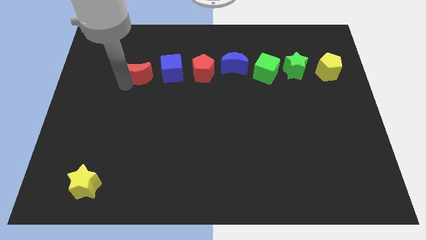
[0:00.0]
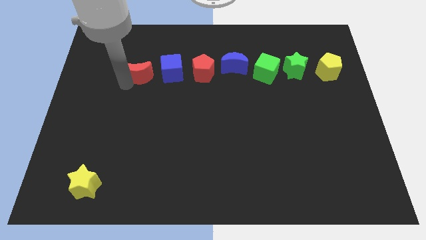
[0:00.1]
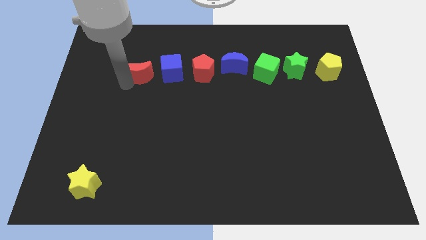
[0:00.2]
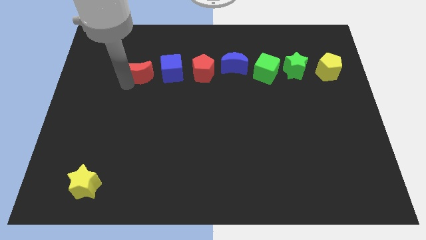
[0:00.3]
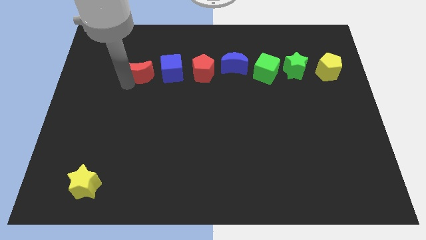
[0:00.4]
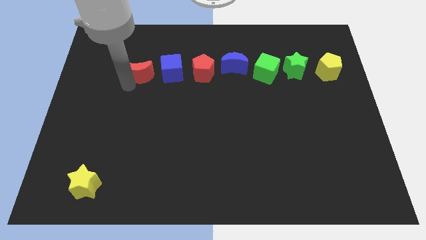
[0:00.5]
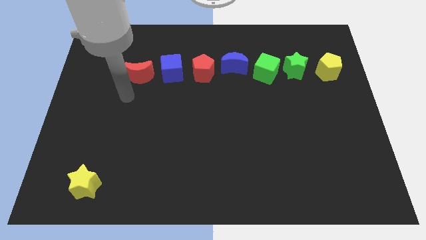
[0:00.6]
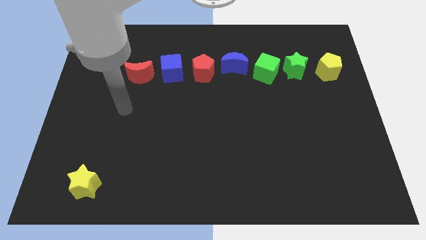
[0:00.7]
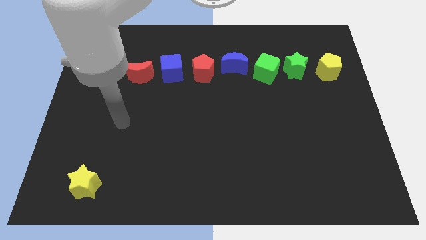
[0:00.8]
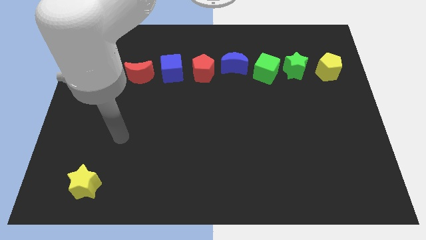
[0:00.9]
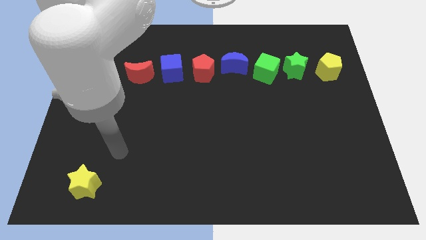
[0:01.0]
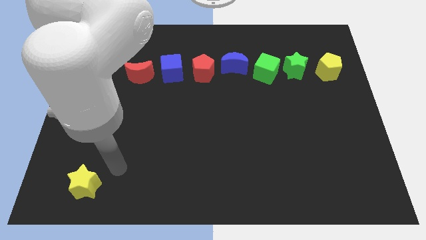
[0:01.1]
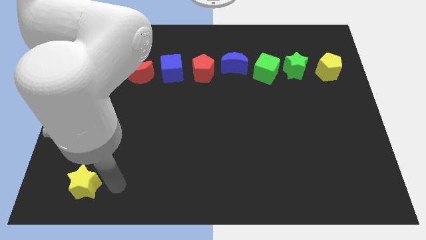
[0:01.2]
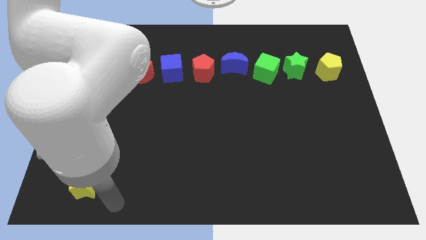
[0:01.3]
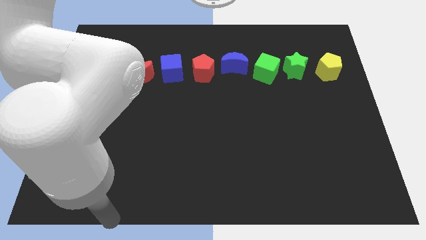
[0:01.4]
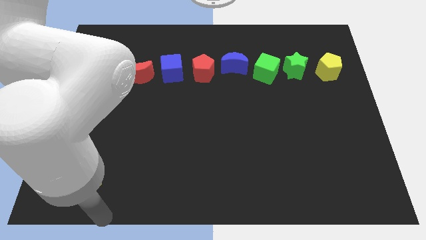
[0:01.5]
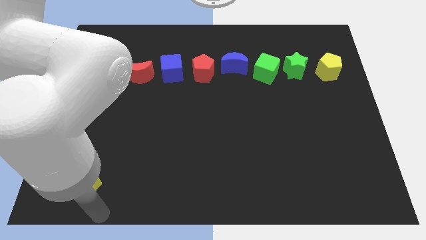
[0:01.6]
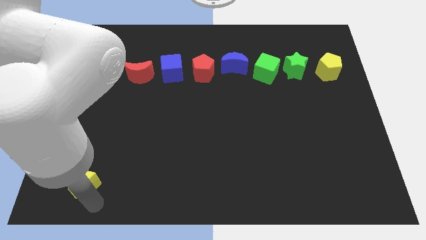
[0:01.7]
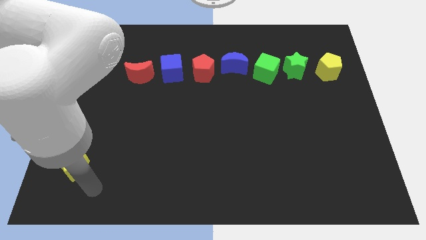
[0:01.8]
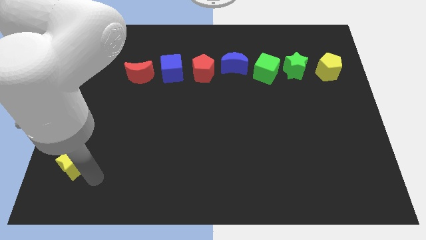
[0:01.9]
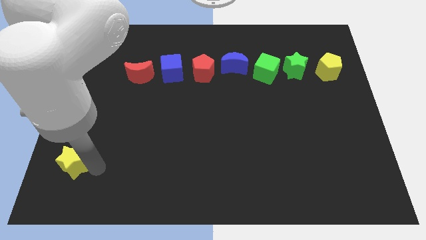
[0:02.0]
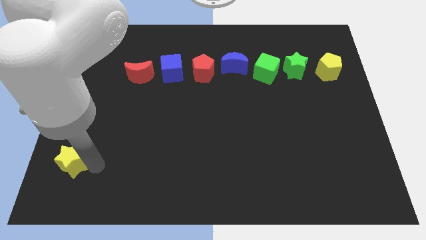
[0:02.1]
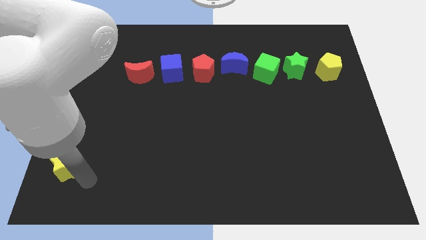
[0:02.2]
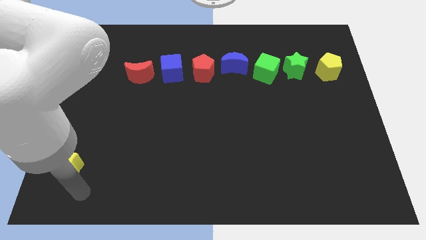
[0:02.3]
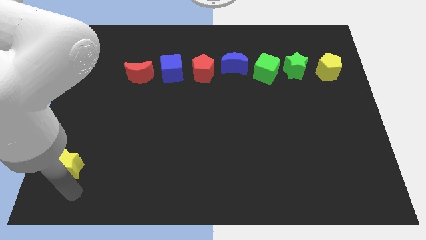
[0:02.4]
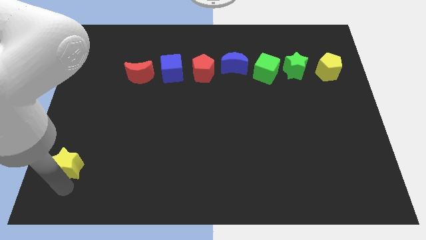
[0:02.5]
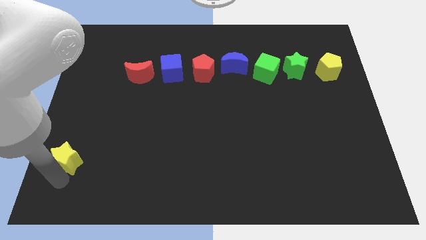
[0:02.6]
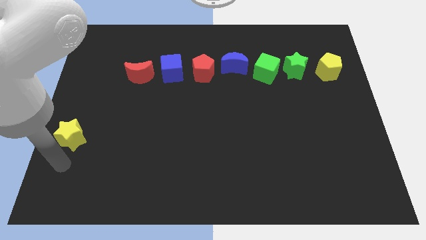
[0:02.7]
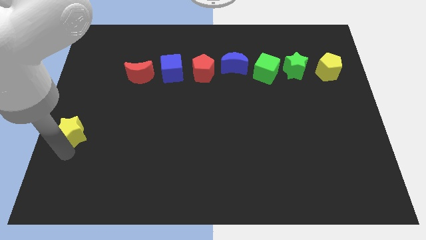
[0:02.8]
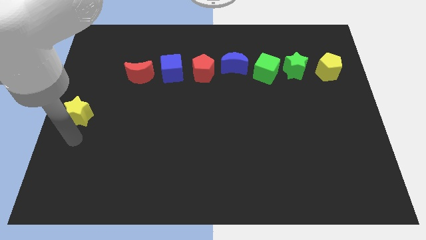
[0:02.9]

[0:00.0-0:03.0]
move the arm away from the red moon

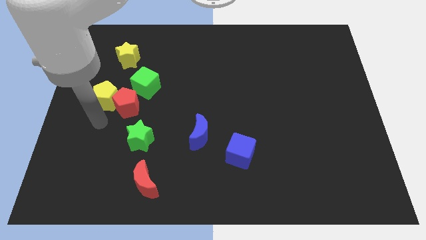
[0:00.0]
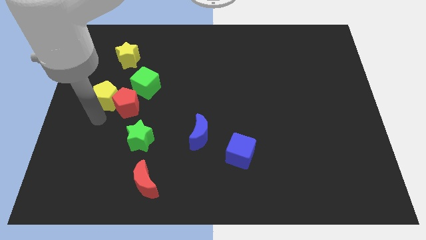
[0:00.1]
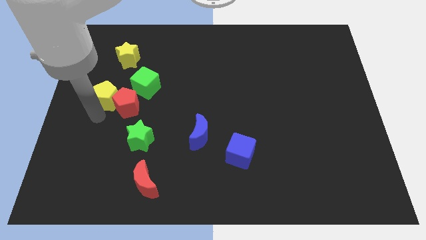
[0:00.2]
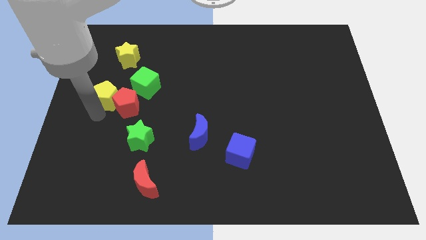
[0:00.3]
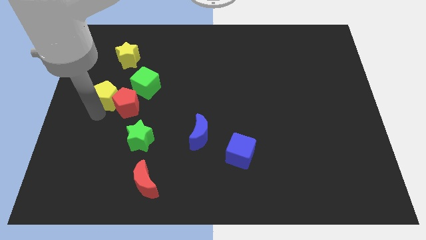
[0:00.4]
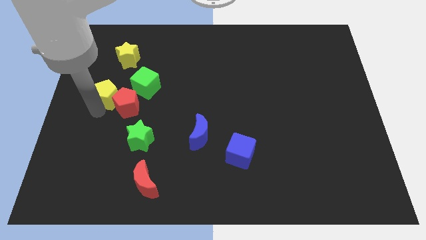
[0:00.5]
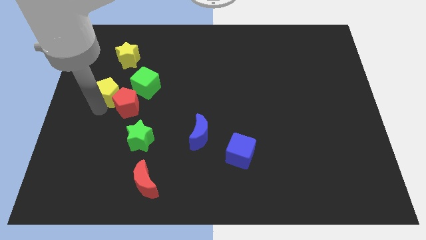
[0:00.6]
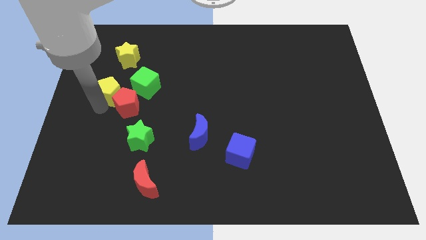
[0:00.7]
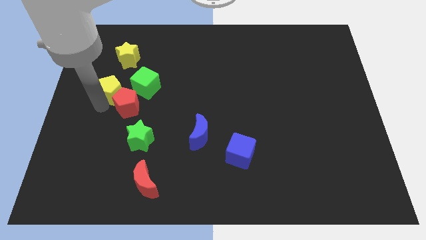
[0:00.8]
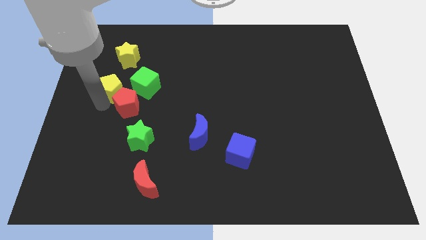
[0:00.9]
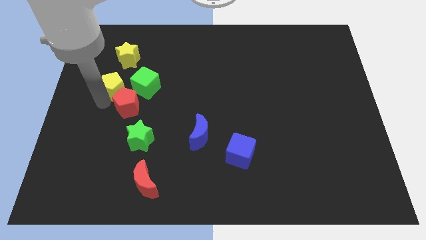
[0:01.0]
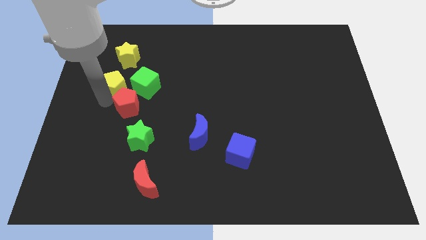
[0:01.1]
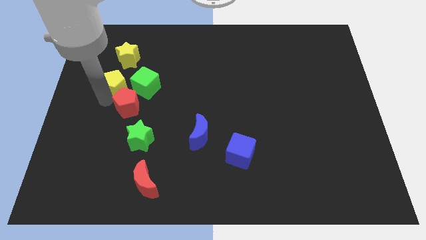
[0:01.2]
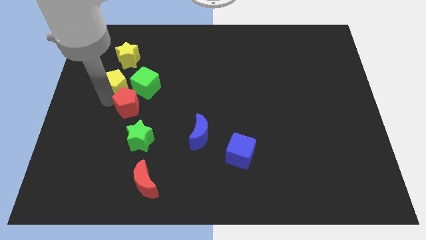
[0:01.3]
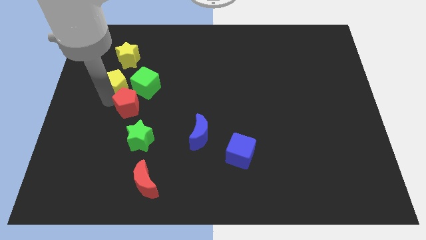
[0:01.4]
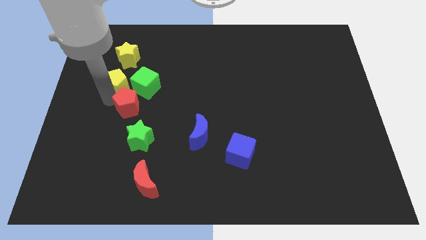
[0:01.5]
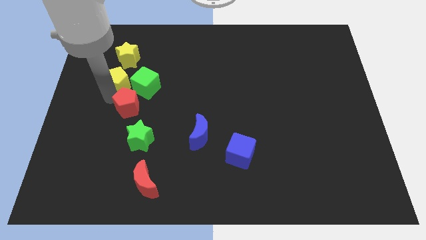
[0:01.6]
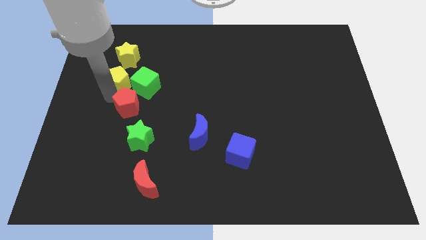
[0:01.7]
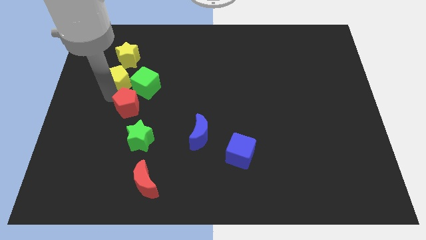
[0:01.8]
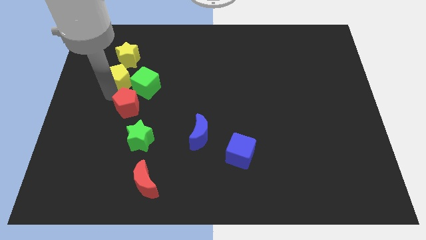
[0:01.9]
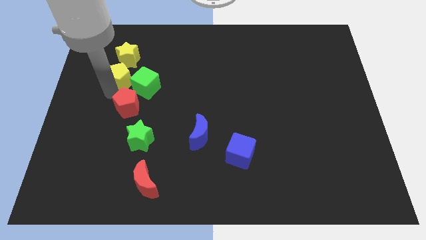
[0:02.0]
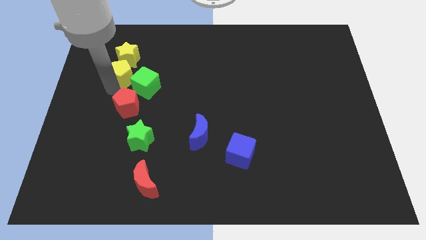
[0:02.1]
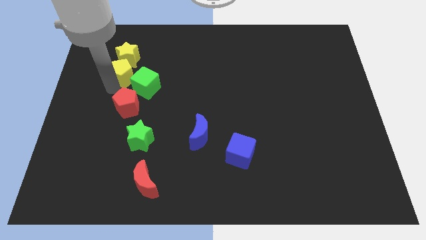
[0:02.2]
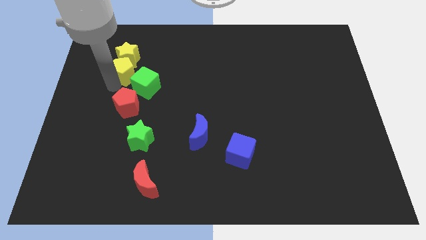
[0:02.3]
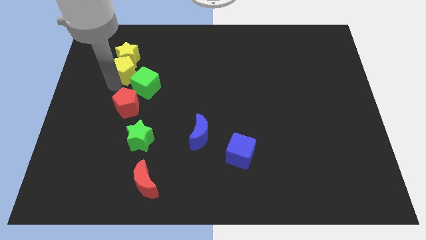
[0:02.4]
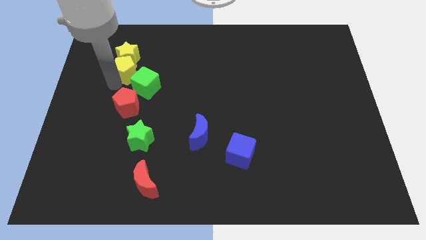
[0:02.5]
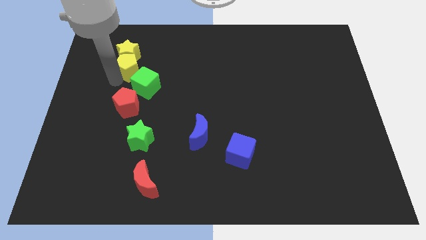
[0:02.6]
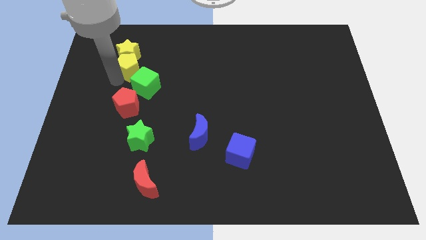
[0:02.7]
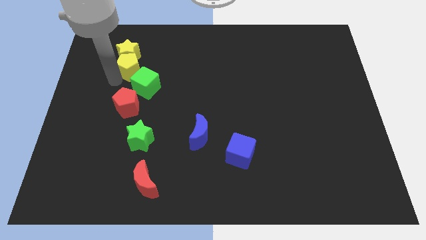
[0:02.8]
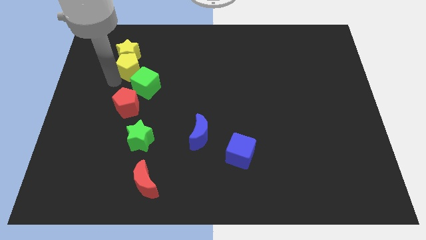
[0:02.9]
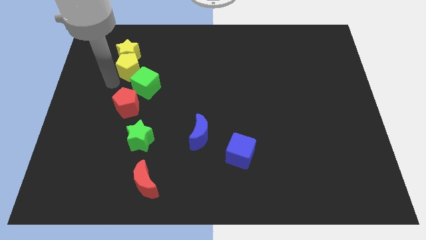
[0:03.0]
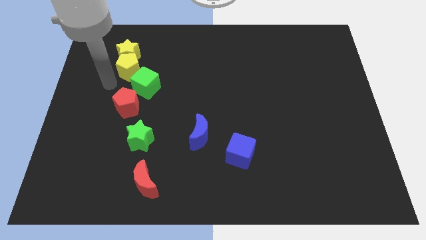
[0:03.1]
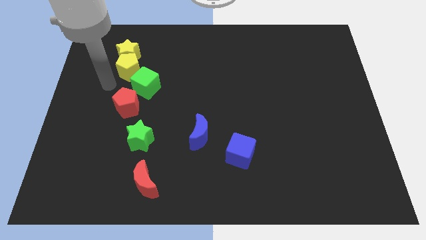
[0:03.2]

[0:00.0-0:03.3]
move the yellow pentagon into the yellow star

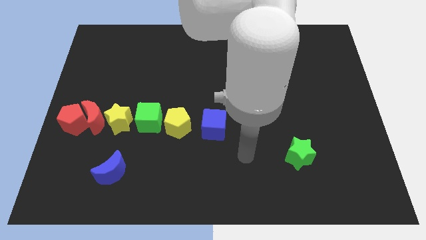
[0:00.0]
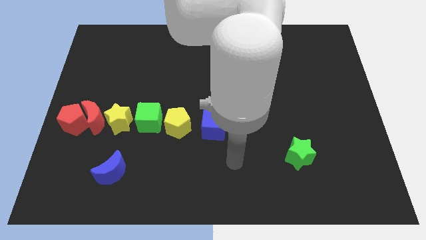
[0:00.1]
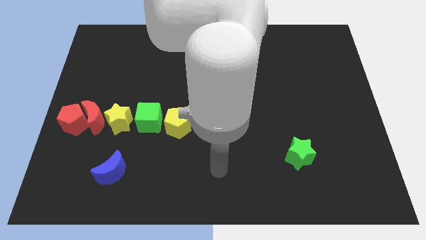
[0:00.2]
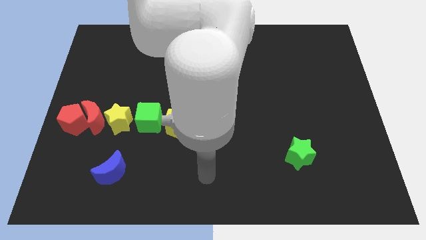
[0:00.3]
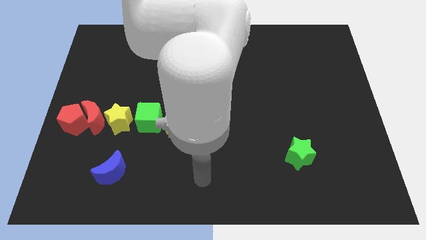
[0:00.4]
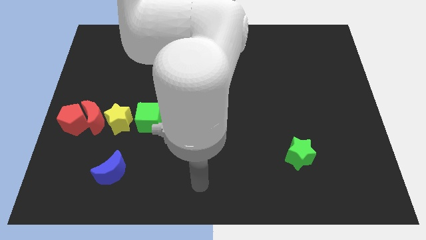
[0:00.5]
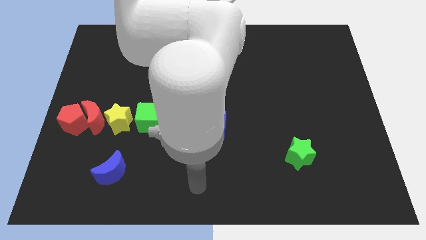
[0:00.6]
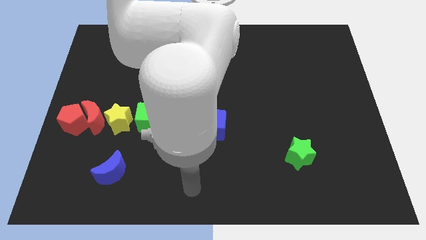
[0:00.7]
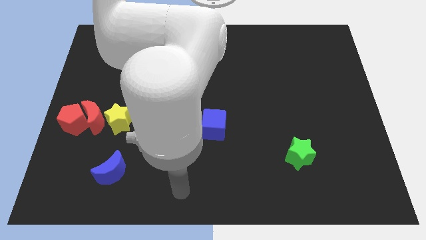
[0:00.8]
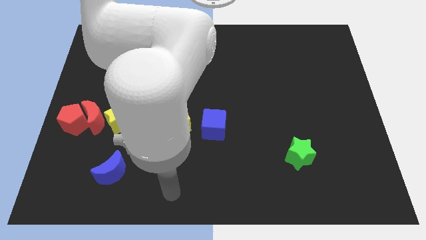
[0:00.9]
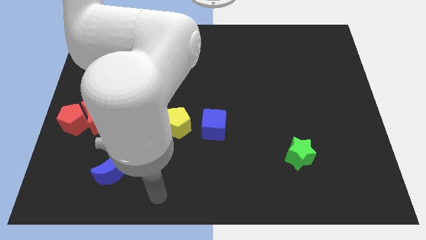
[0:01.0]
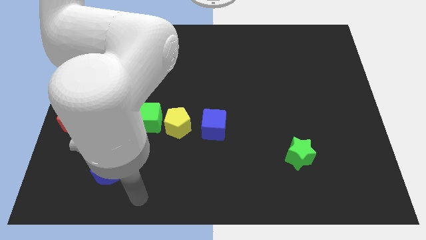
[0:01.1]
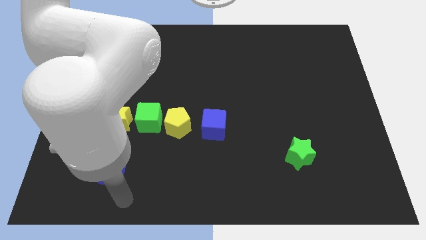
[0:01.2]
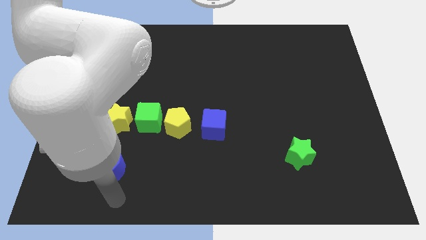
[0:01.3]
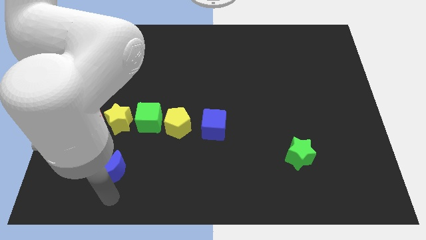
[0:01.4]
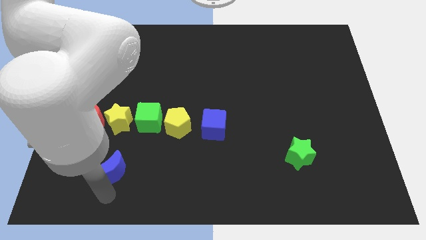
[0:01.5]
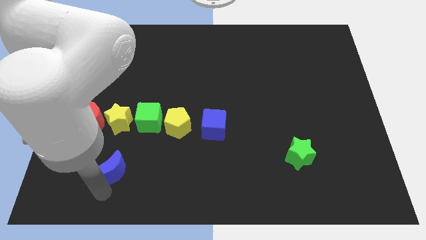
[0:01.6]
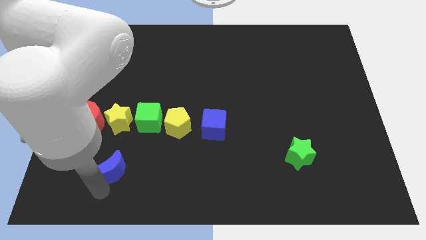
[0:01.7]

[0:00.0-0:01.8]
move the arm to the bottom of the blue crescent

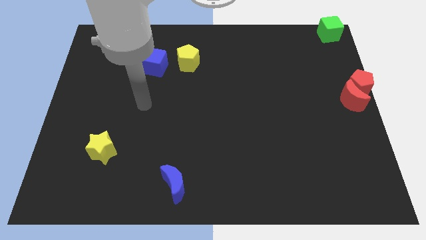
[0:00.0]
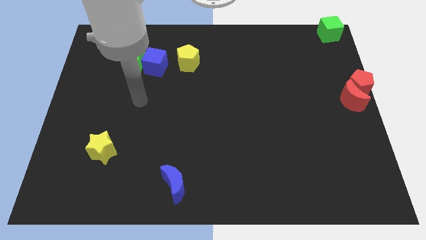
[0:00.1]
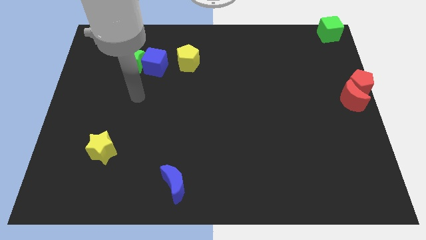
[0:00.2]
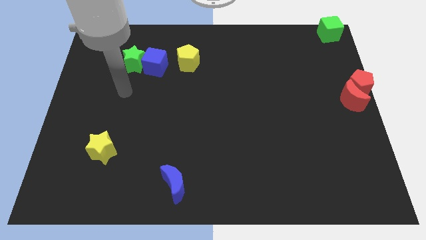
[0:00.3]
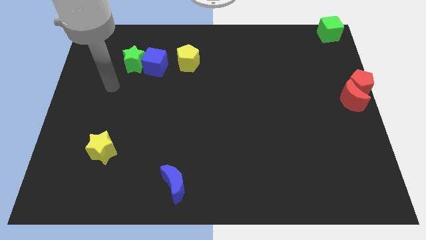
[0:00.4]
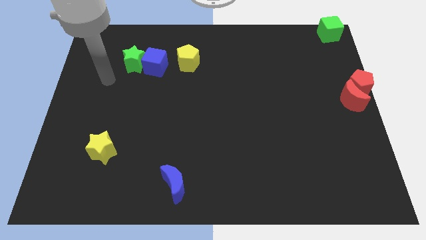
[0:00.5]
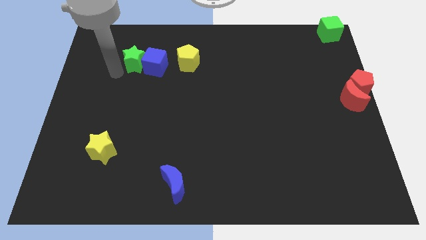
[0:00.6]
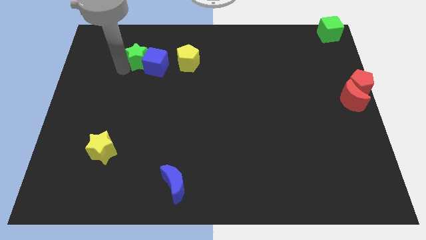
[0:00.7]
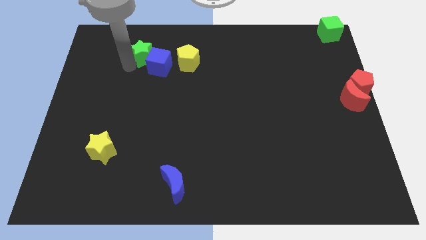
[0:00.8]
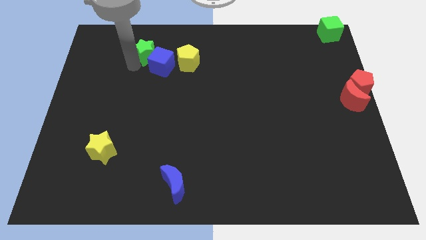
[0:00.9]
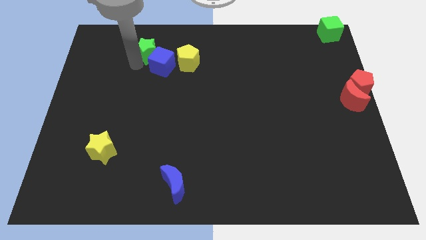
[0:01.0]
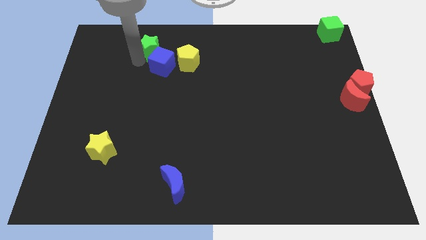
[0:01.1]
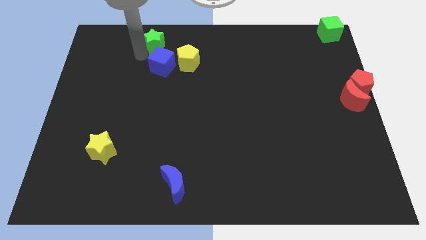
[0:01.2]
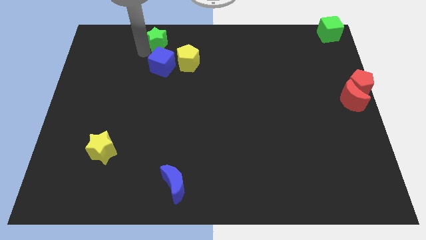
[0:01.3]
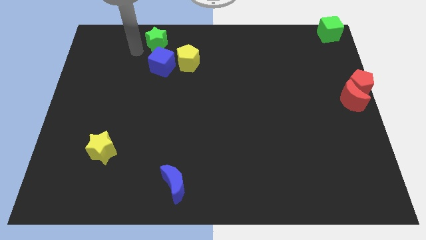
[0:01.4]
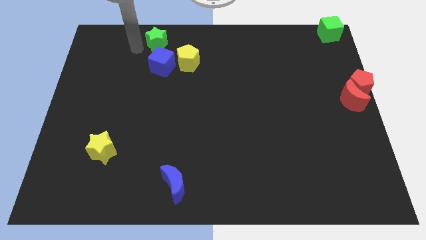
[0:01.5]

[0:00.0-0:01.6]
push the green star to the top side of the blue block
